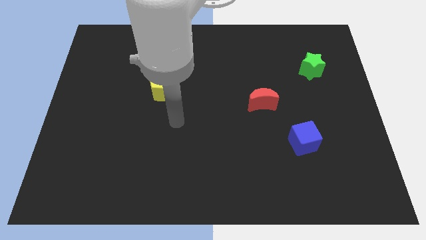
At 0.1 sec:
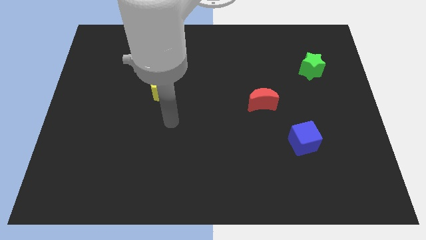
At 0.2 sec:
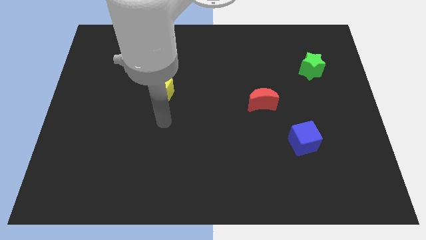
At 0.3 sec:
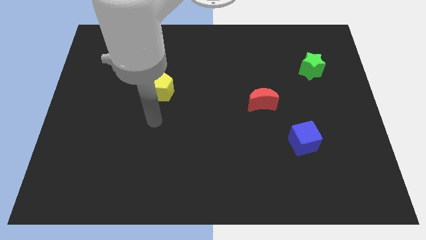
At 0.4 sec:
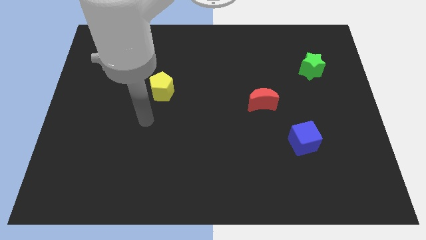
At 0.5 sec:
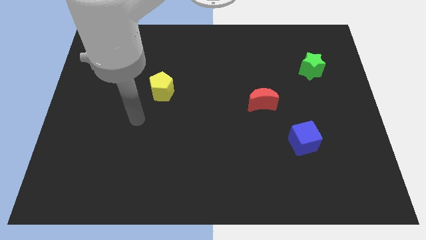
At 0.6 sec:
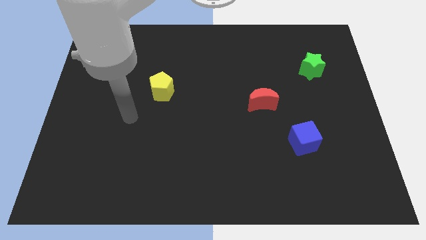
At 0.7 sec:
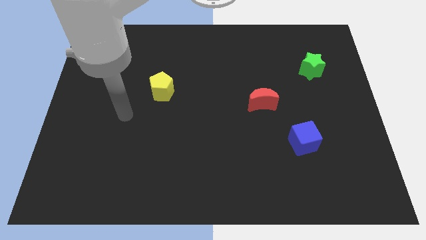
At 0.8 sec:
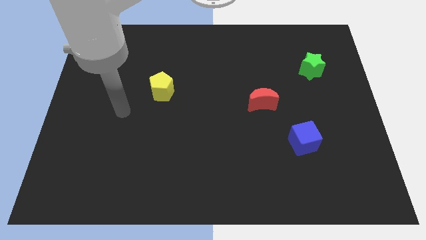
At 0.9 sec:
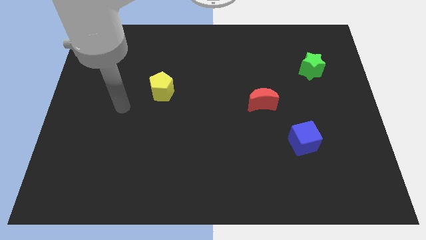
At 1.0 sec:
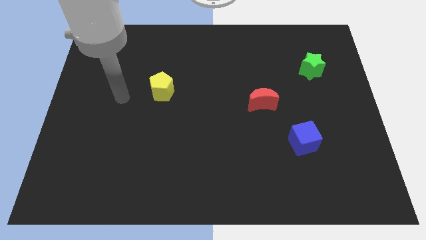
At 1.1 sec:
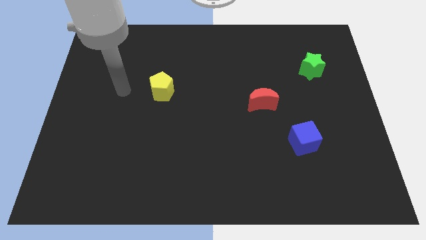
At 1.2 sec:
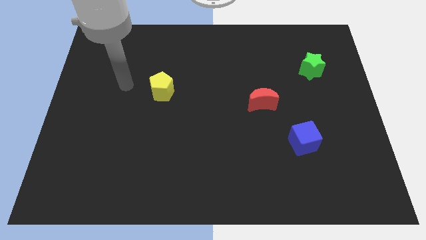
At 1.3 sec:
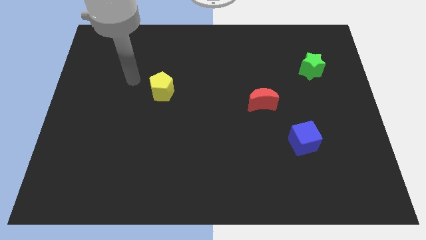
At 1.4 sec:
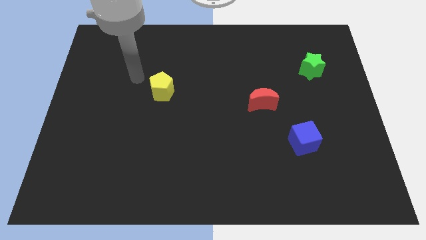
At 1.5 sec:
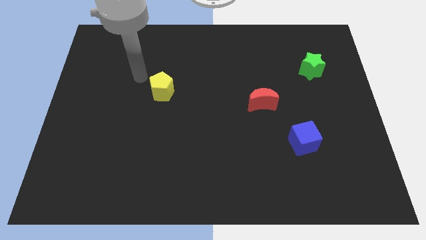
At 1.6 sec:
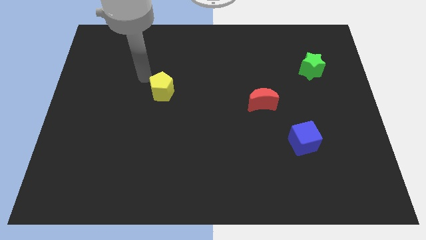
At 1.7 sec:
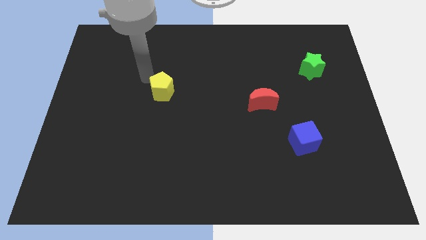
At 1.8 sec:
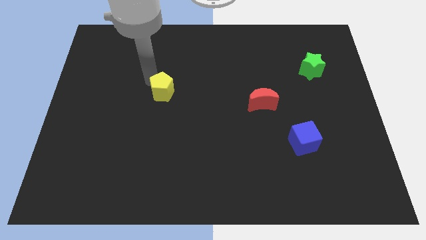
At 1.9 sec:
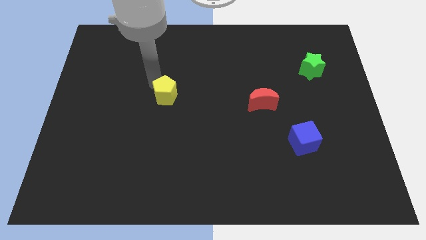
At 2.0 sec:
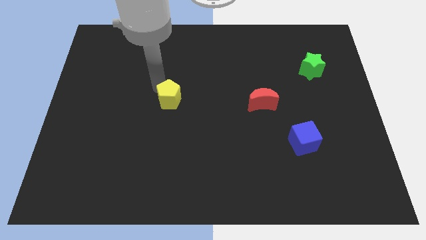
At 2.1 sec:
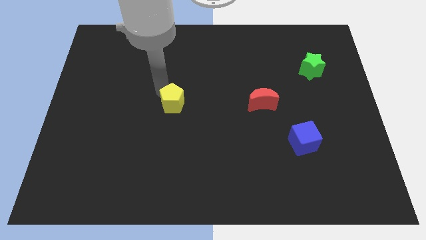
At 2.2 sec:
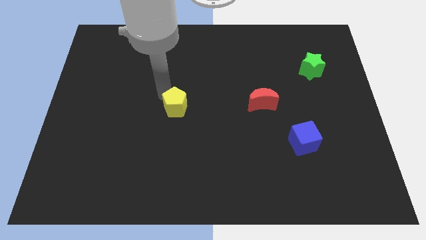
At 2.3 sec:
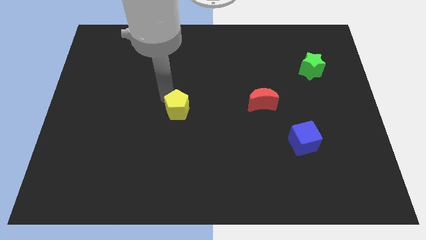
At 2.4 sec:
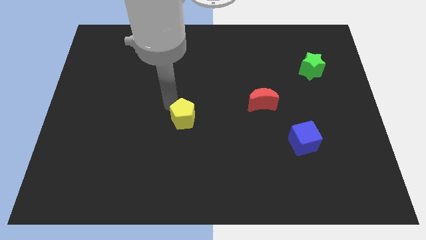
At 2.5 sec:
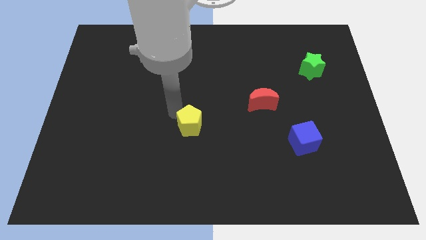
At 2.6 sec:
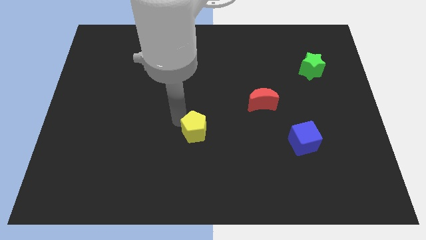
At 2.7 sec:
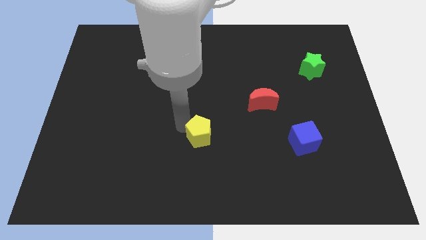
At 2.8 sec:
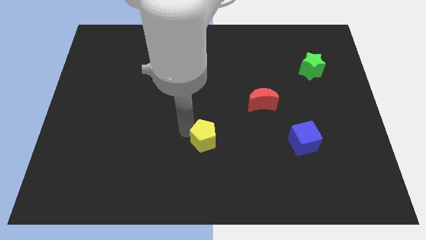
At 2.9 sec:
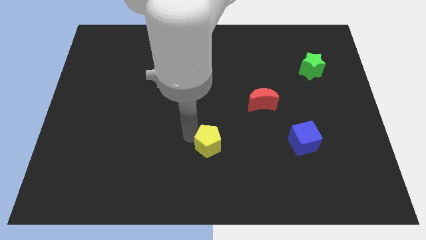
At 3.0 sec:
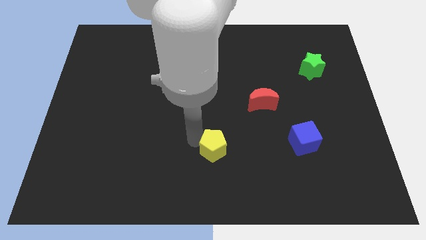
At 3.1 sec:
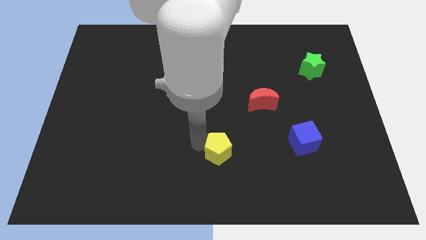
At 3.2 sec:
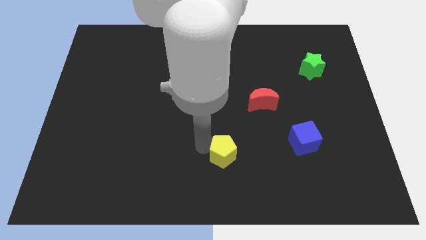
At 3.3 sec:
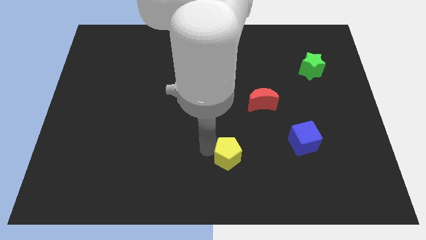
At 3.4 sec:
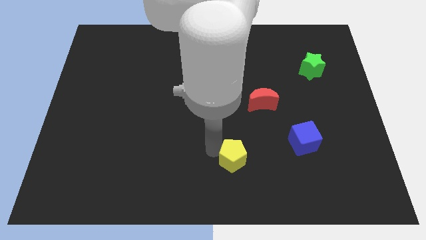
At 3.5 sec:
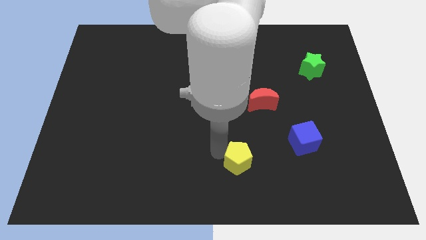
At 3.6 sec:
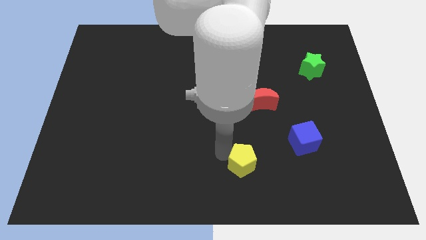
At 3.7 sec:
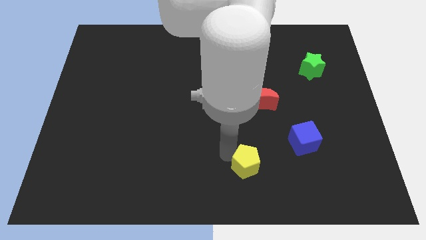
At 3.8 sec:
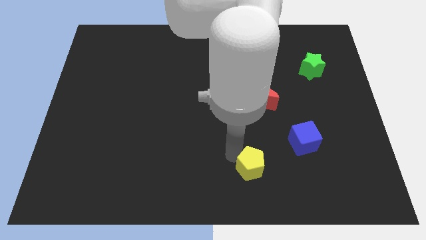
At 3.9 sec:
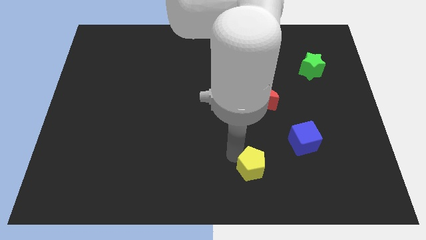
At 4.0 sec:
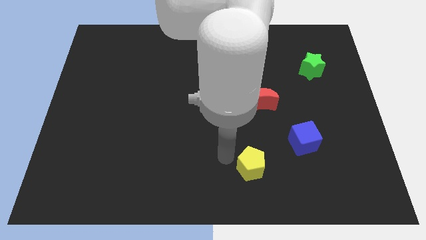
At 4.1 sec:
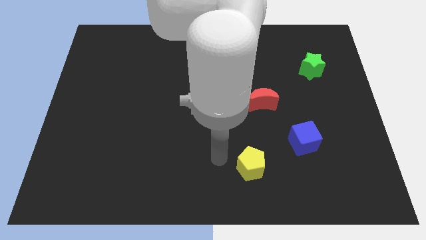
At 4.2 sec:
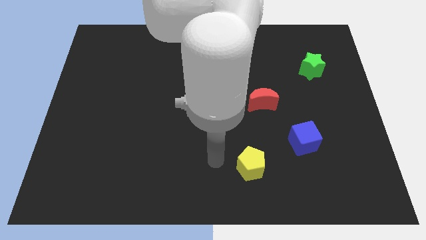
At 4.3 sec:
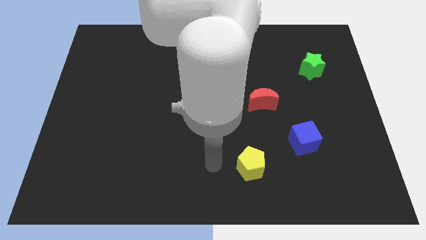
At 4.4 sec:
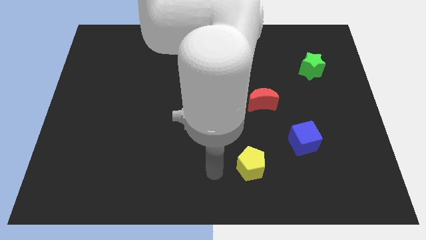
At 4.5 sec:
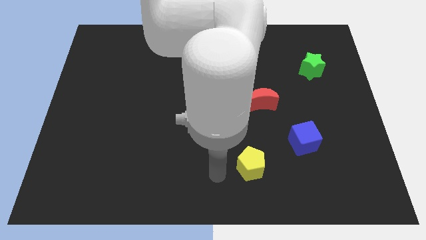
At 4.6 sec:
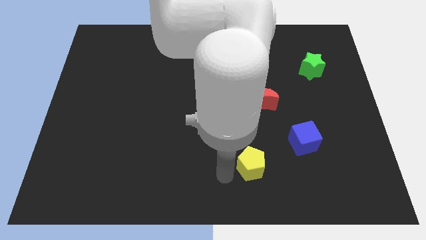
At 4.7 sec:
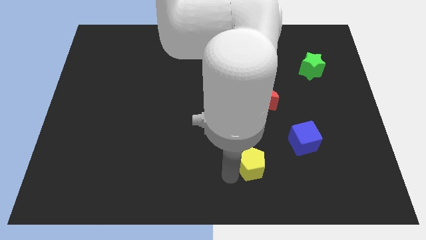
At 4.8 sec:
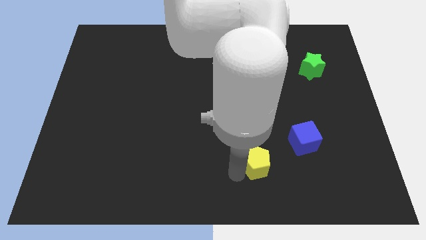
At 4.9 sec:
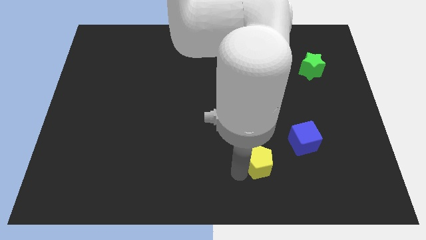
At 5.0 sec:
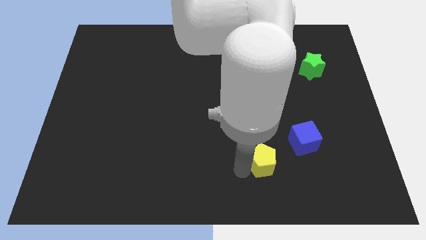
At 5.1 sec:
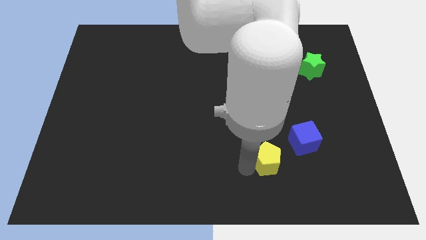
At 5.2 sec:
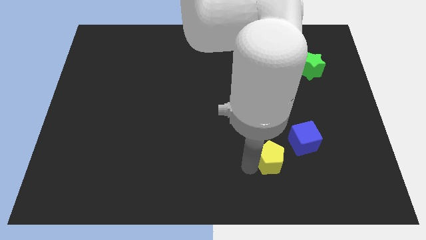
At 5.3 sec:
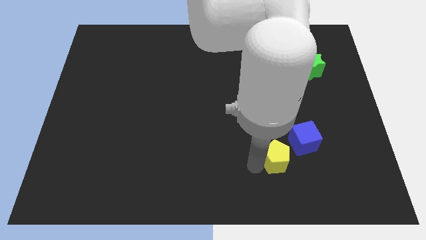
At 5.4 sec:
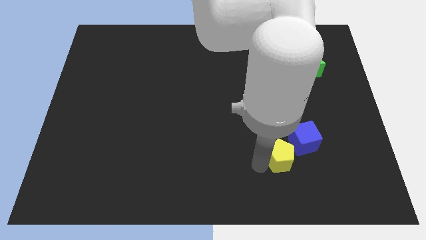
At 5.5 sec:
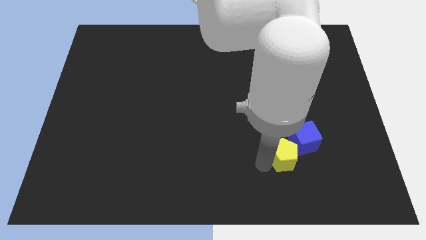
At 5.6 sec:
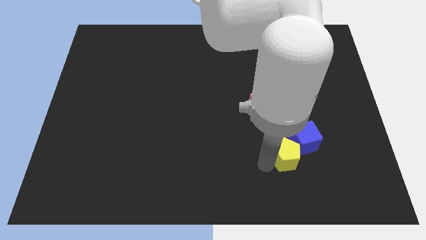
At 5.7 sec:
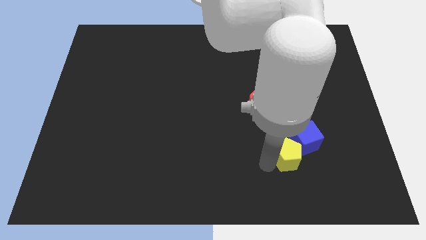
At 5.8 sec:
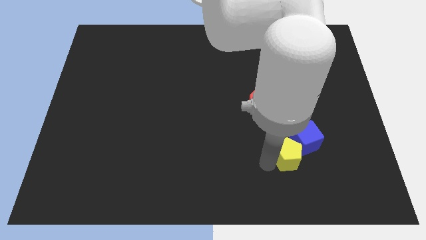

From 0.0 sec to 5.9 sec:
put the yellow block close to the blue cube

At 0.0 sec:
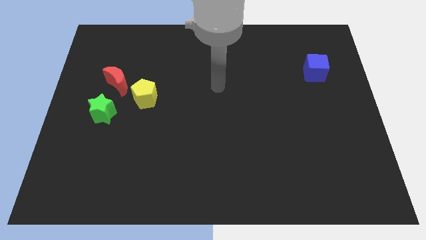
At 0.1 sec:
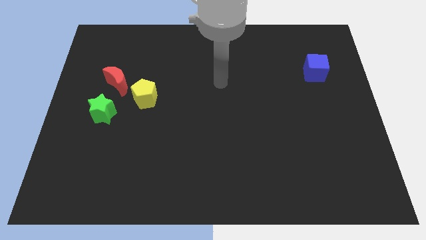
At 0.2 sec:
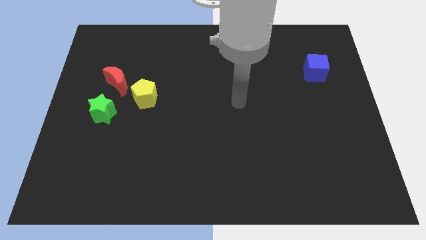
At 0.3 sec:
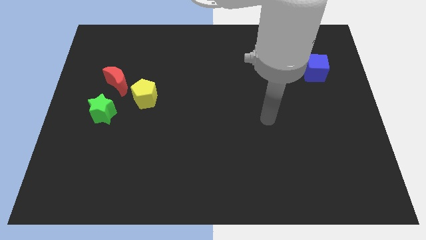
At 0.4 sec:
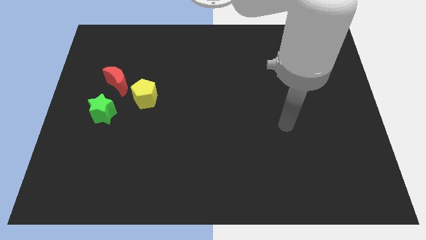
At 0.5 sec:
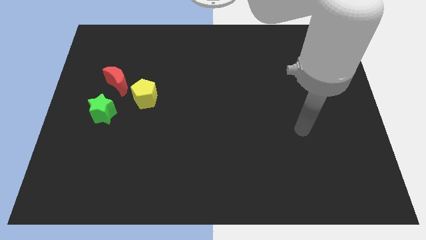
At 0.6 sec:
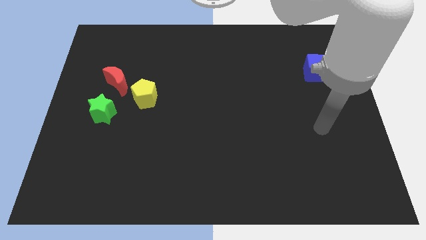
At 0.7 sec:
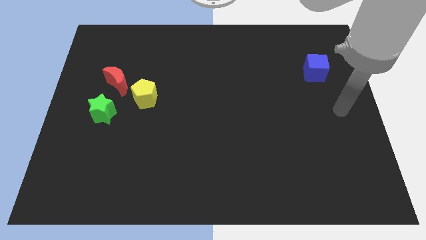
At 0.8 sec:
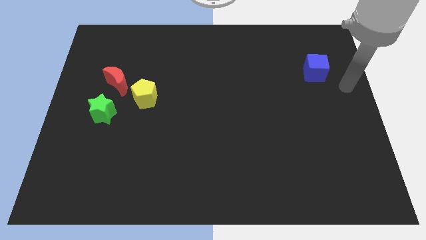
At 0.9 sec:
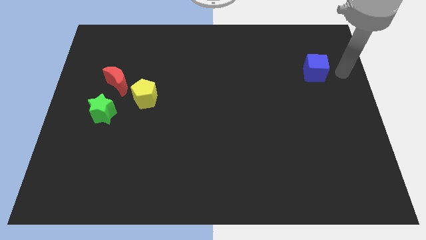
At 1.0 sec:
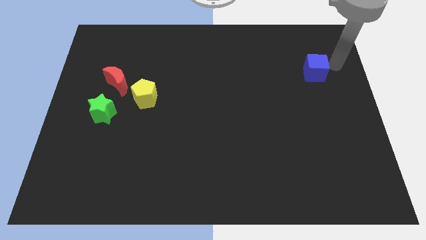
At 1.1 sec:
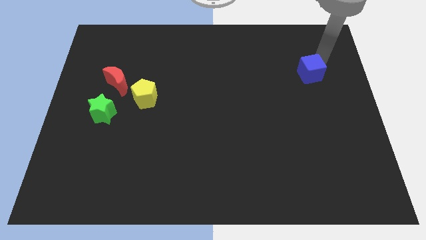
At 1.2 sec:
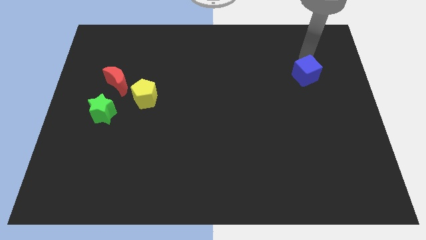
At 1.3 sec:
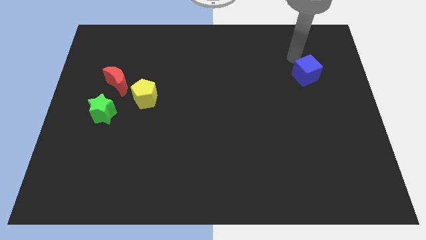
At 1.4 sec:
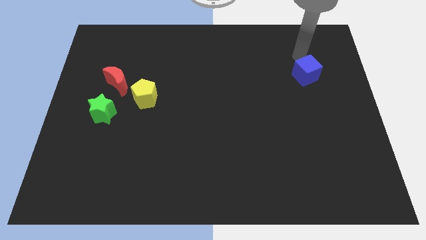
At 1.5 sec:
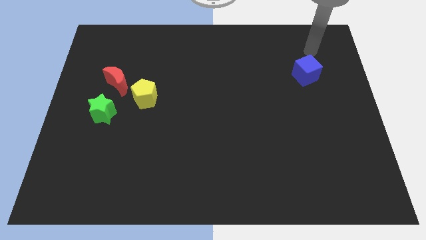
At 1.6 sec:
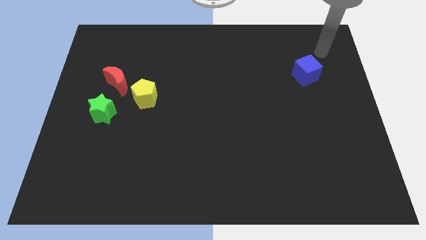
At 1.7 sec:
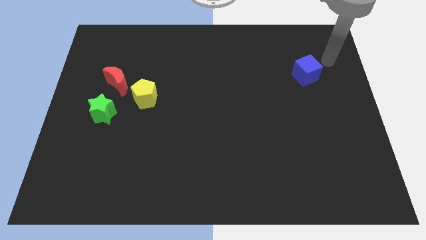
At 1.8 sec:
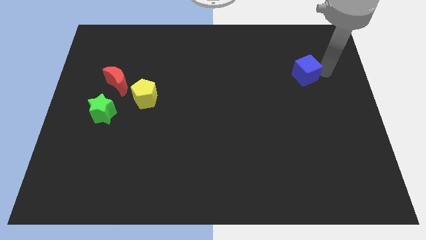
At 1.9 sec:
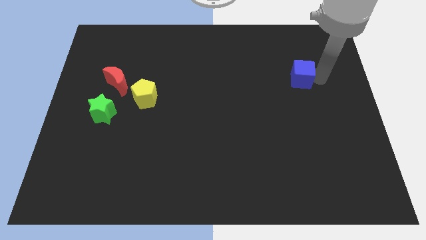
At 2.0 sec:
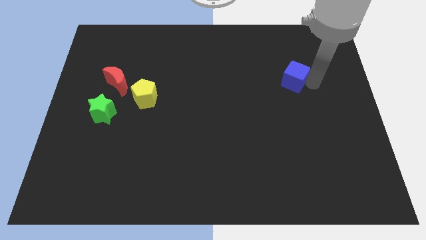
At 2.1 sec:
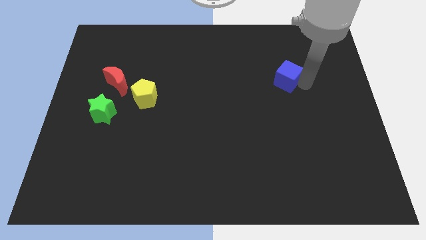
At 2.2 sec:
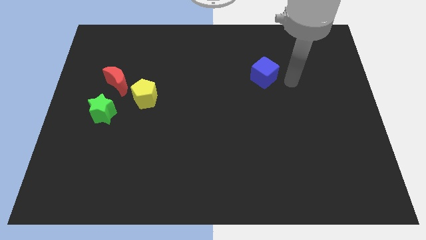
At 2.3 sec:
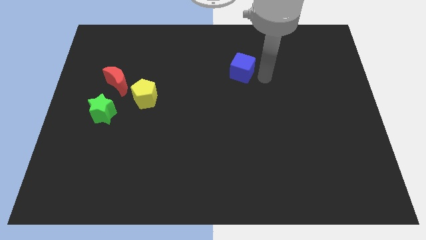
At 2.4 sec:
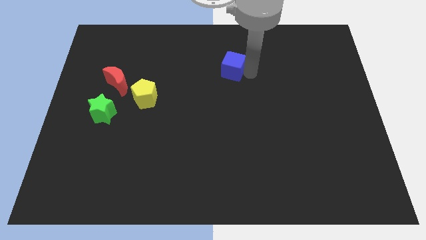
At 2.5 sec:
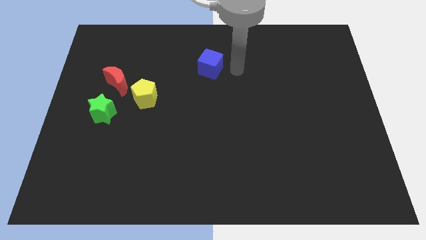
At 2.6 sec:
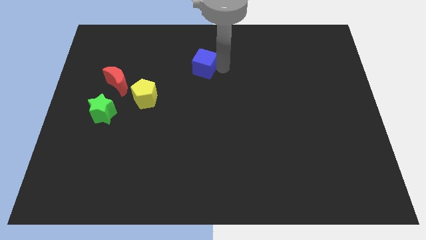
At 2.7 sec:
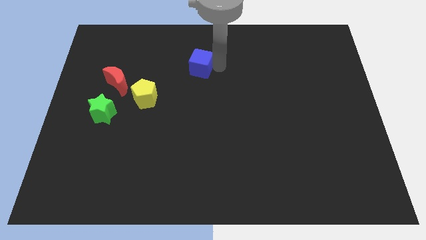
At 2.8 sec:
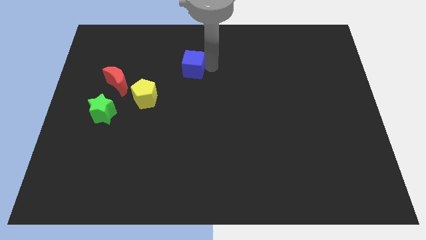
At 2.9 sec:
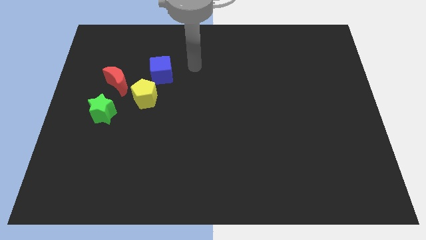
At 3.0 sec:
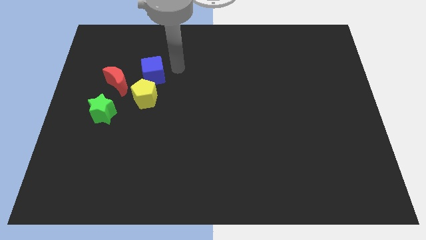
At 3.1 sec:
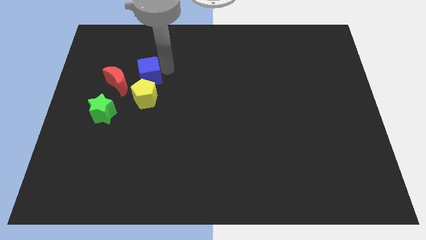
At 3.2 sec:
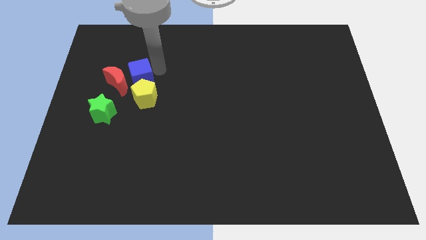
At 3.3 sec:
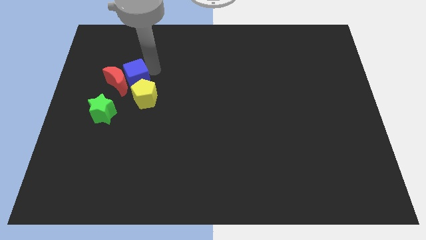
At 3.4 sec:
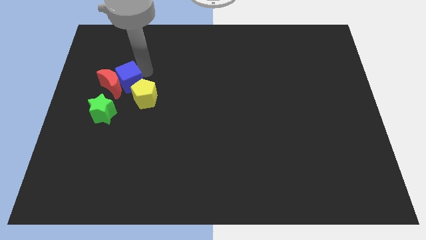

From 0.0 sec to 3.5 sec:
slide the cube next to the moon
